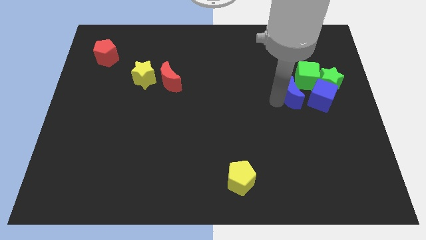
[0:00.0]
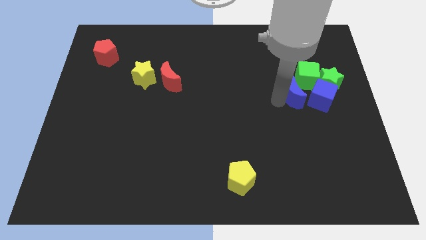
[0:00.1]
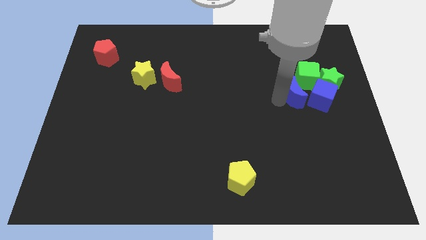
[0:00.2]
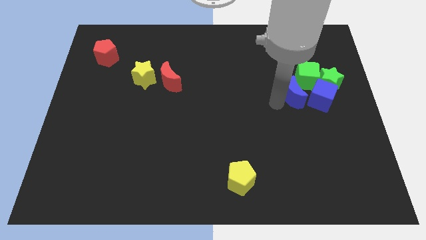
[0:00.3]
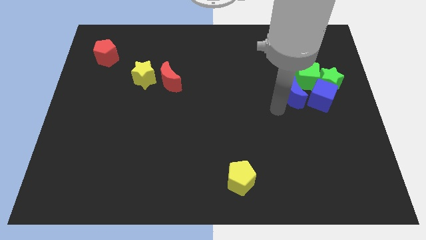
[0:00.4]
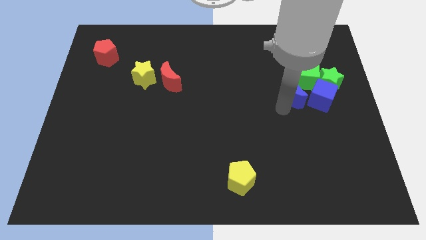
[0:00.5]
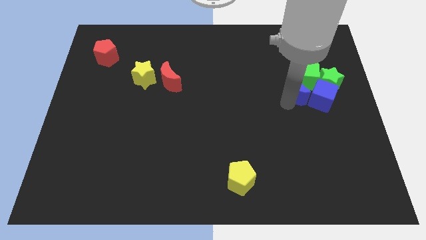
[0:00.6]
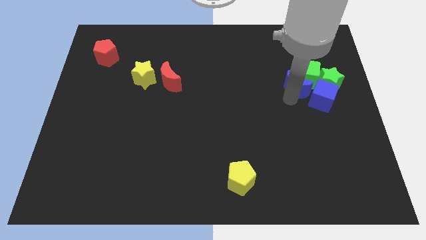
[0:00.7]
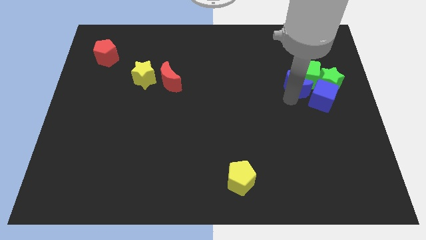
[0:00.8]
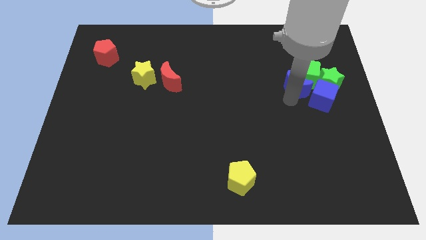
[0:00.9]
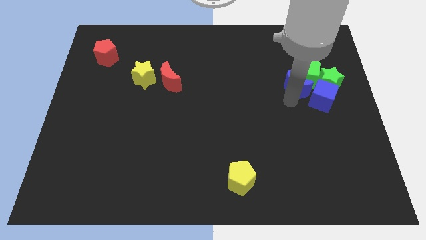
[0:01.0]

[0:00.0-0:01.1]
place the blue crescent into green cube

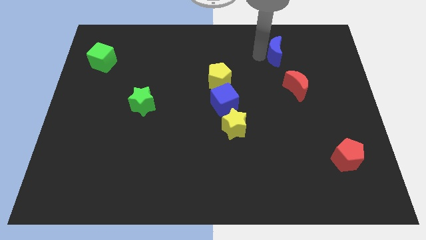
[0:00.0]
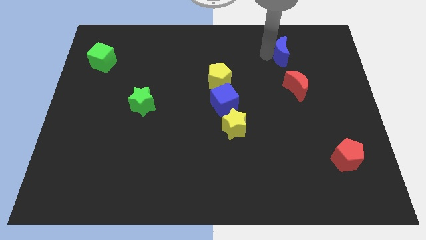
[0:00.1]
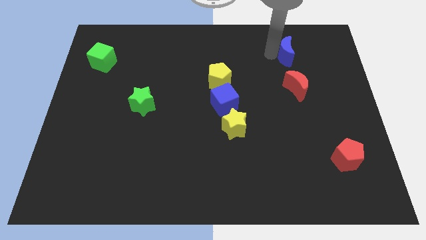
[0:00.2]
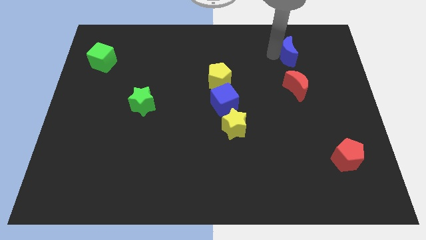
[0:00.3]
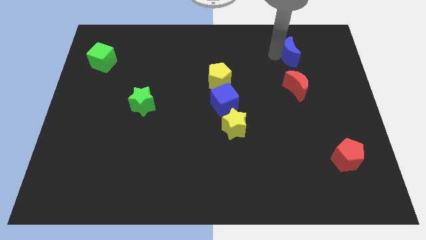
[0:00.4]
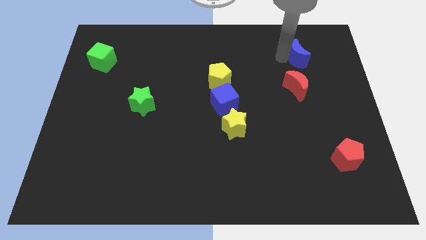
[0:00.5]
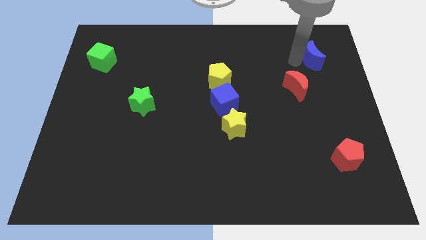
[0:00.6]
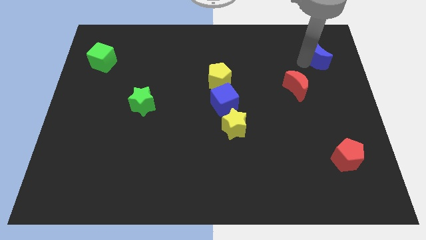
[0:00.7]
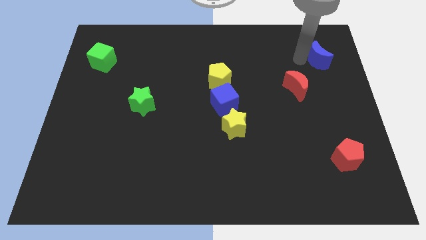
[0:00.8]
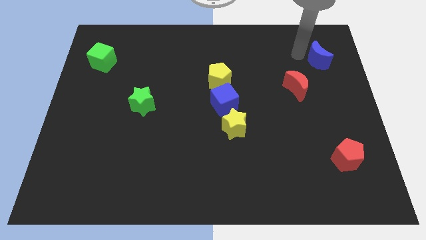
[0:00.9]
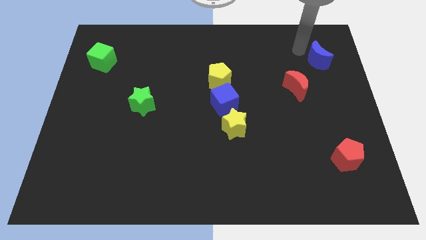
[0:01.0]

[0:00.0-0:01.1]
move the blue crescent to the right side of the board

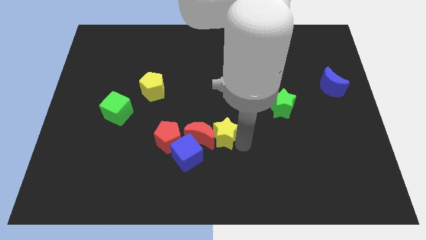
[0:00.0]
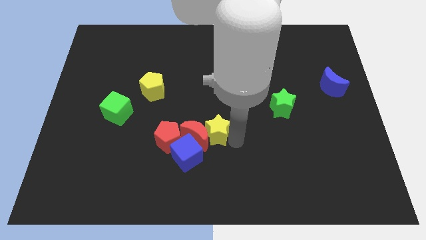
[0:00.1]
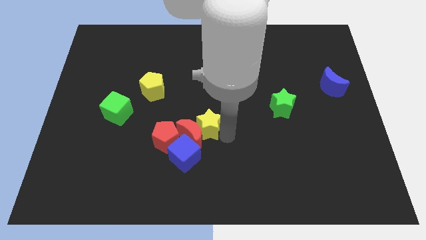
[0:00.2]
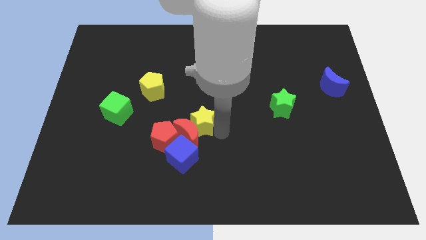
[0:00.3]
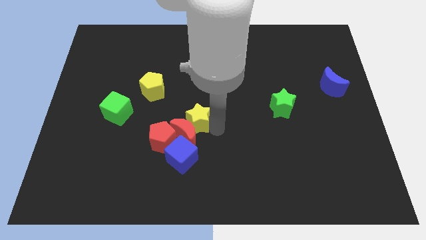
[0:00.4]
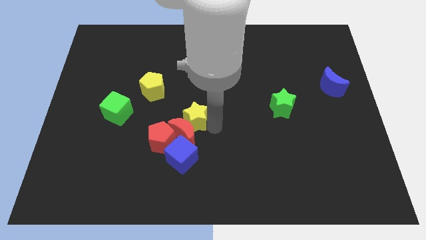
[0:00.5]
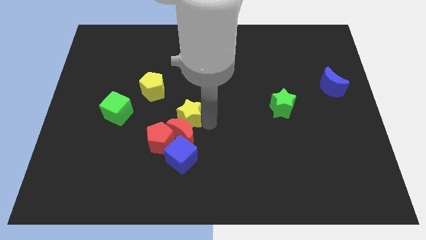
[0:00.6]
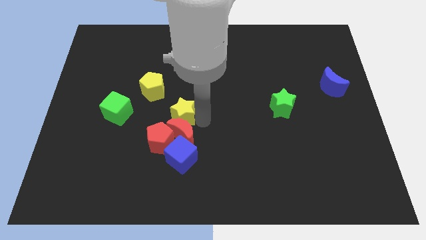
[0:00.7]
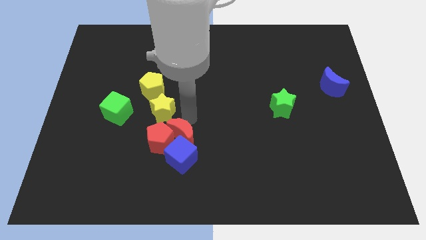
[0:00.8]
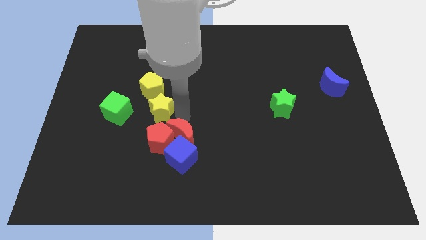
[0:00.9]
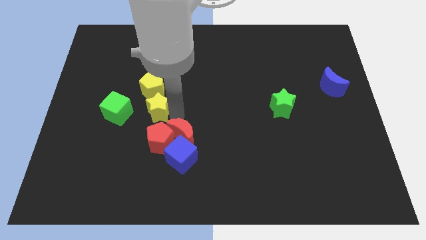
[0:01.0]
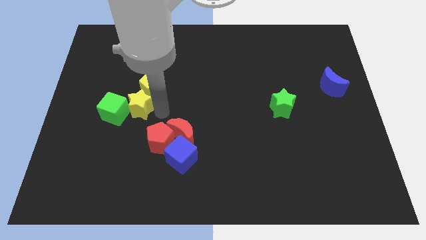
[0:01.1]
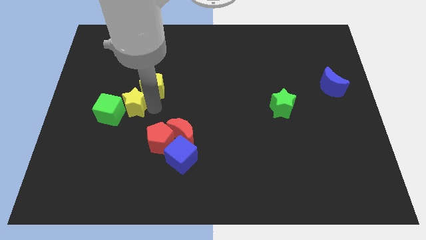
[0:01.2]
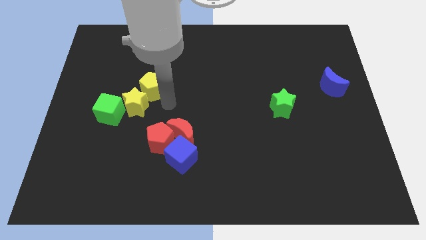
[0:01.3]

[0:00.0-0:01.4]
place the yellow star in between the green cube and the yellow pentagon

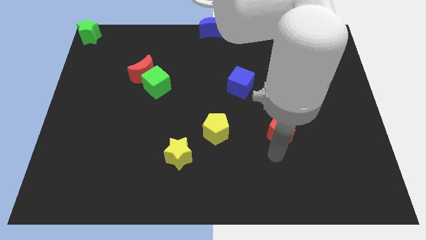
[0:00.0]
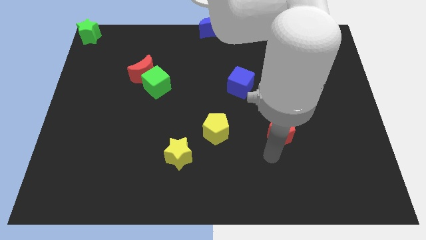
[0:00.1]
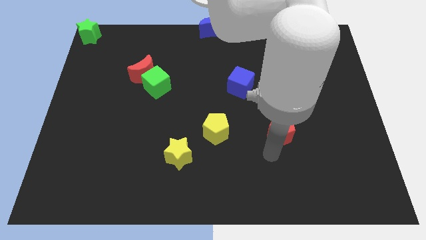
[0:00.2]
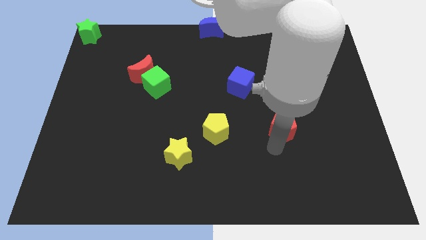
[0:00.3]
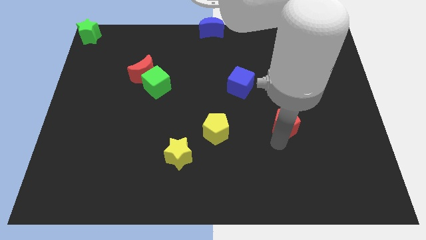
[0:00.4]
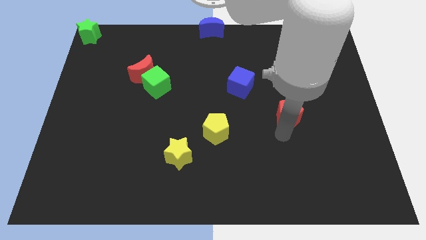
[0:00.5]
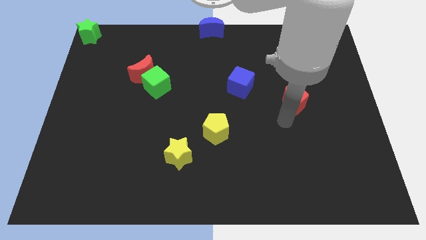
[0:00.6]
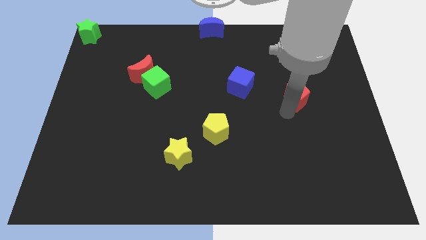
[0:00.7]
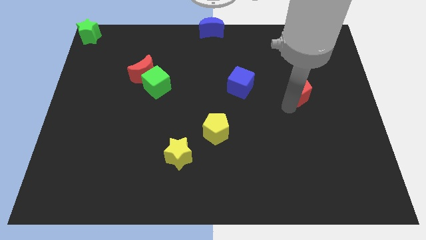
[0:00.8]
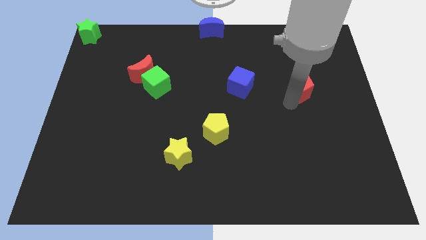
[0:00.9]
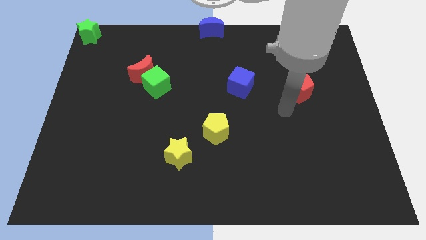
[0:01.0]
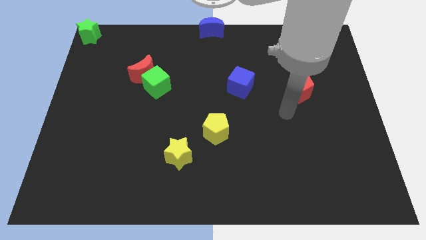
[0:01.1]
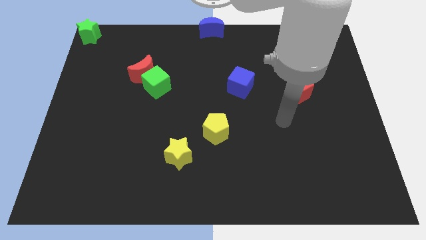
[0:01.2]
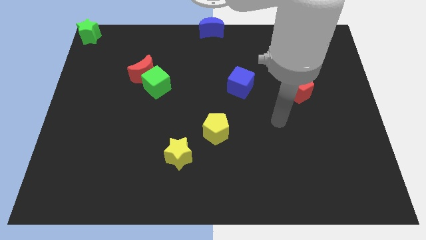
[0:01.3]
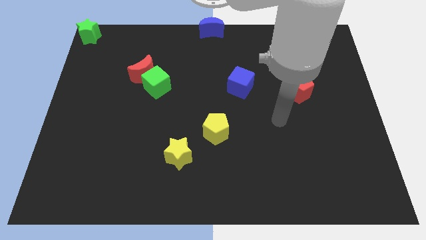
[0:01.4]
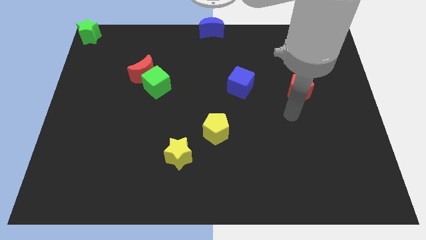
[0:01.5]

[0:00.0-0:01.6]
move the red pentagon horizontally at the right side of the blue cube

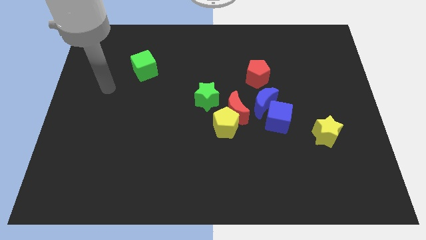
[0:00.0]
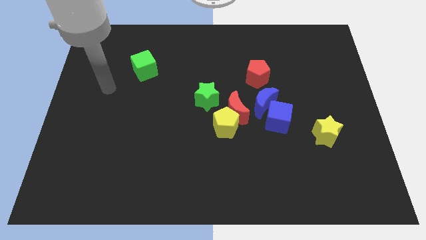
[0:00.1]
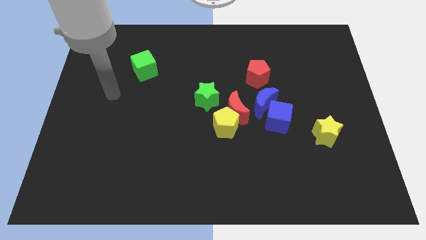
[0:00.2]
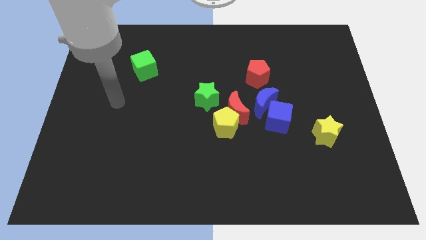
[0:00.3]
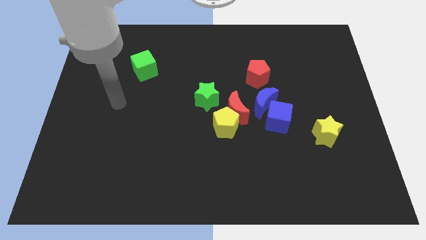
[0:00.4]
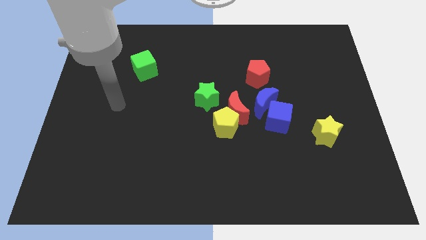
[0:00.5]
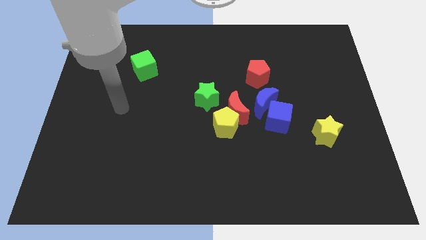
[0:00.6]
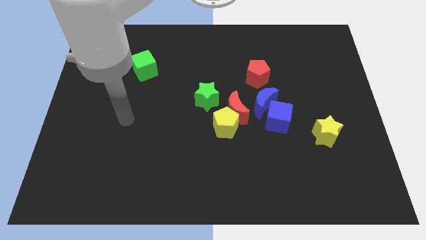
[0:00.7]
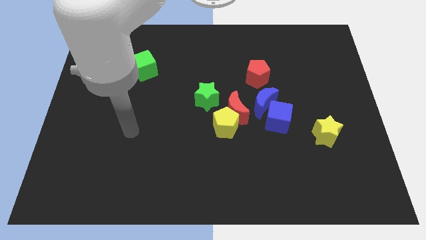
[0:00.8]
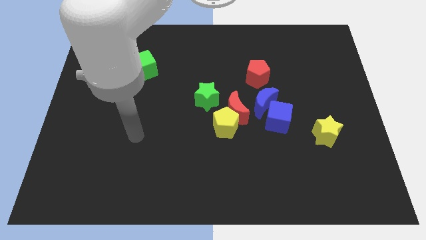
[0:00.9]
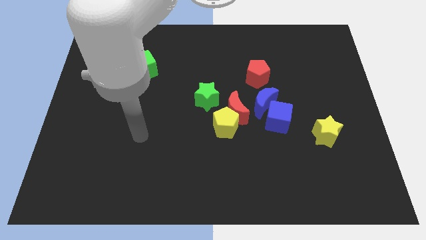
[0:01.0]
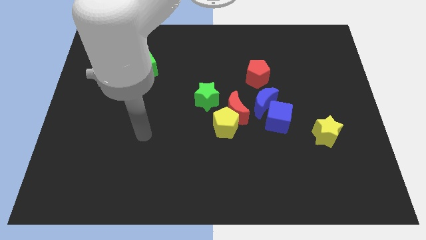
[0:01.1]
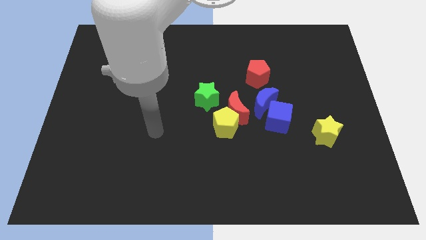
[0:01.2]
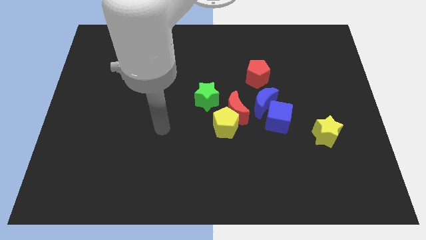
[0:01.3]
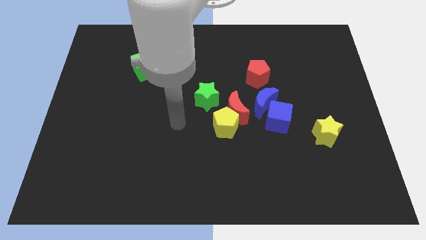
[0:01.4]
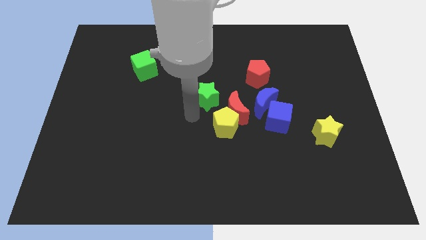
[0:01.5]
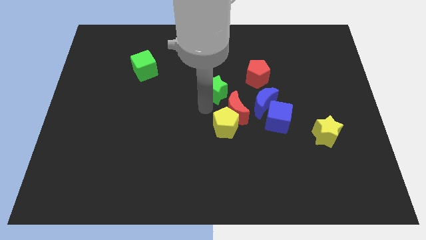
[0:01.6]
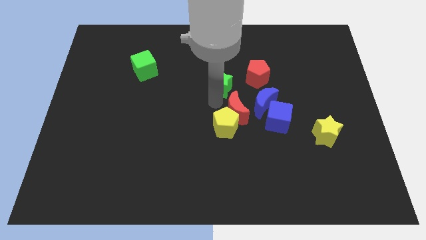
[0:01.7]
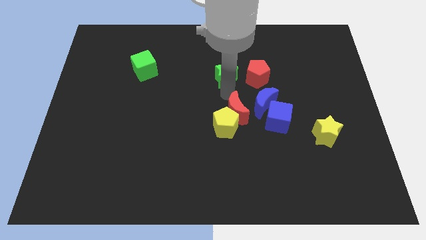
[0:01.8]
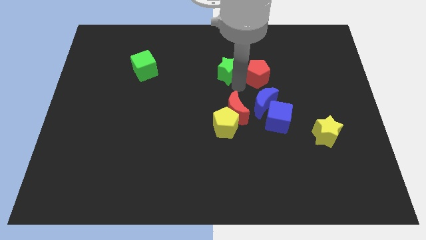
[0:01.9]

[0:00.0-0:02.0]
move the green star to the left of the red pentagon

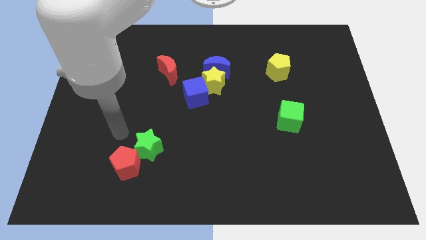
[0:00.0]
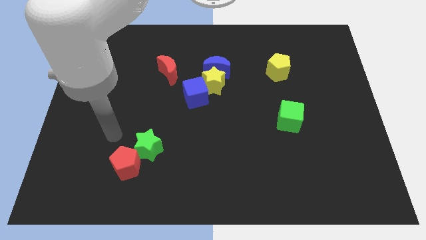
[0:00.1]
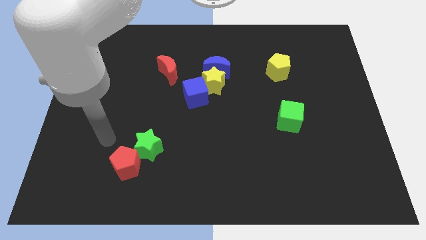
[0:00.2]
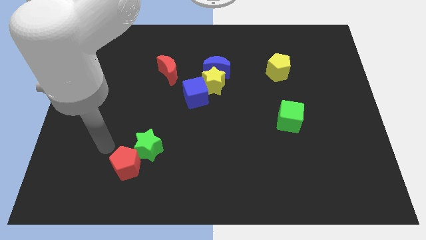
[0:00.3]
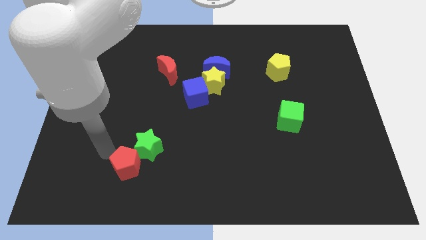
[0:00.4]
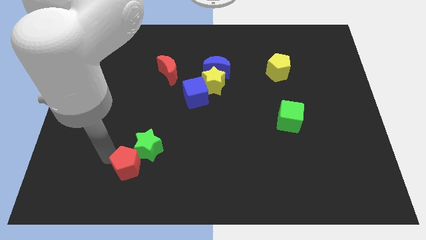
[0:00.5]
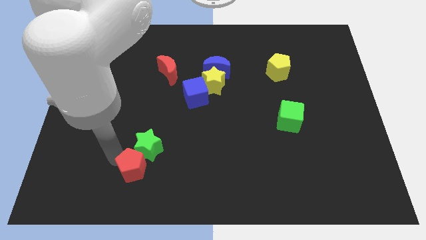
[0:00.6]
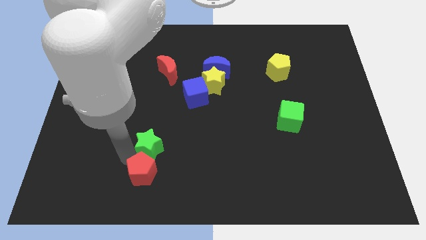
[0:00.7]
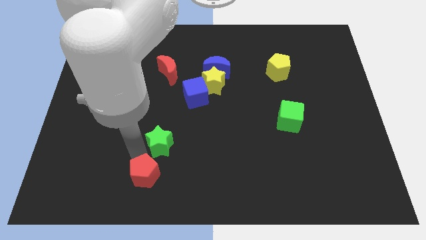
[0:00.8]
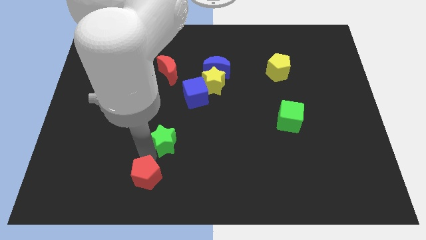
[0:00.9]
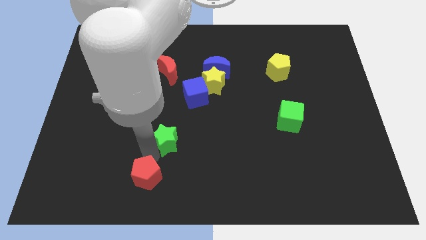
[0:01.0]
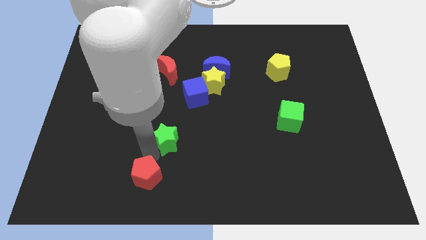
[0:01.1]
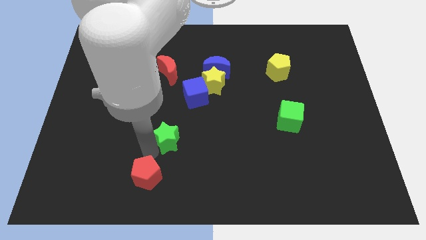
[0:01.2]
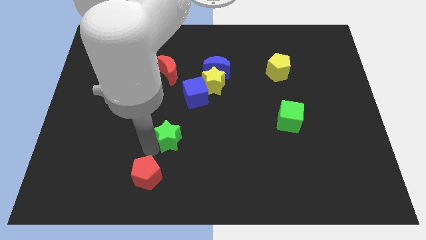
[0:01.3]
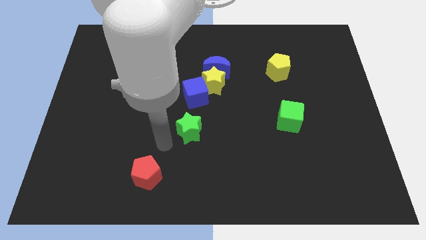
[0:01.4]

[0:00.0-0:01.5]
put the green star in between the blue cube and red pentagon

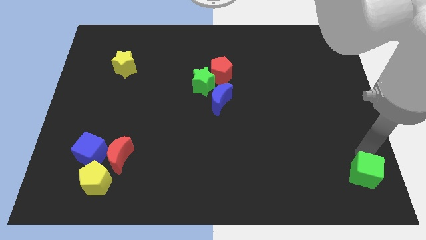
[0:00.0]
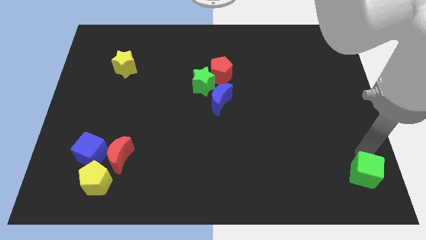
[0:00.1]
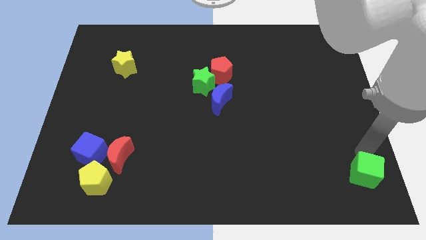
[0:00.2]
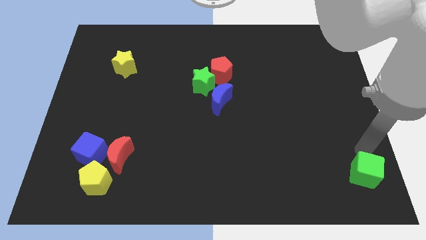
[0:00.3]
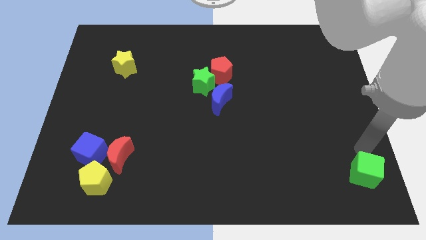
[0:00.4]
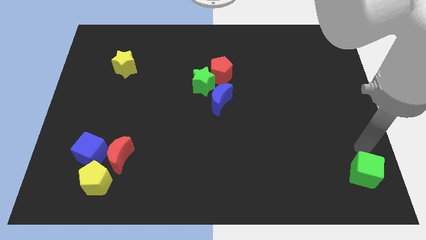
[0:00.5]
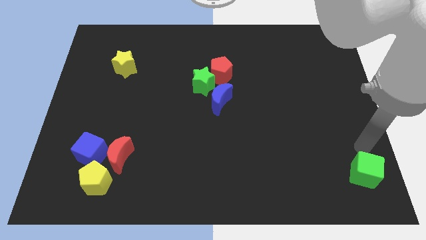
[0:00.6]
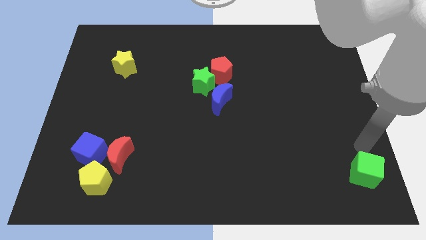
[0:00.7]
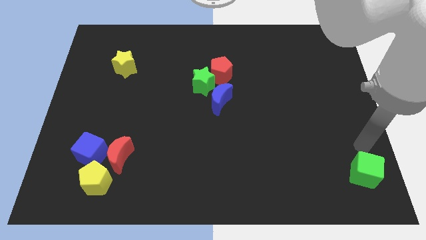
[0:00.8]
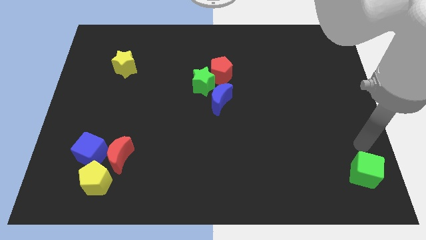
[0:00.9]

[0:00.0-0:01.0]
touch the green cube slightly on its top
